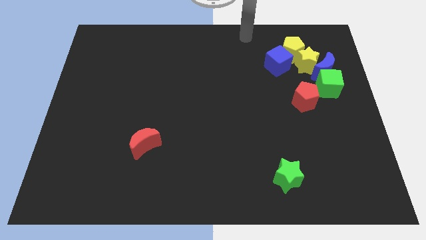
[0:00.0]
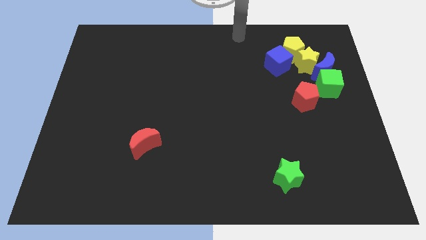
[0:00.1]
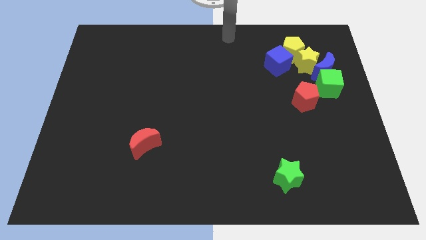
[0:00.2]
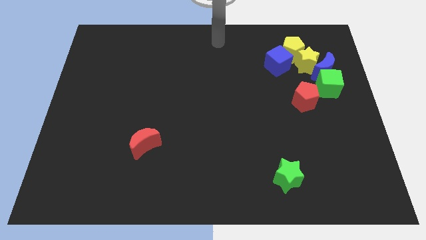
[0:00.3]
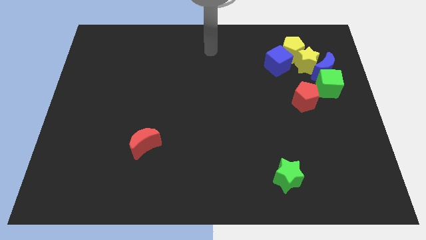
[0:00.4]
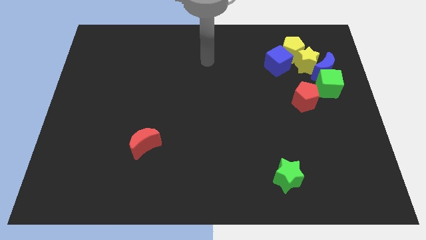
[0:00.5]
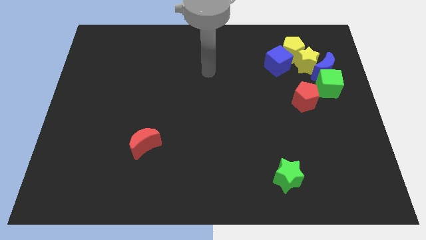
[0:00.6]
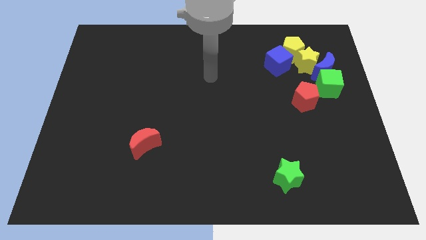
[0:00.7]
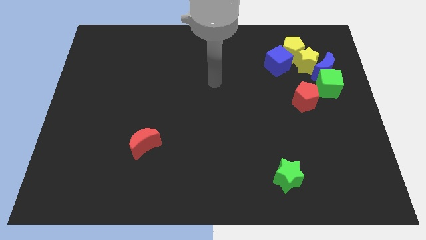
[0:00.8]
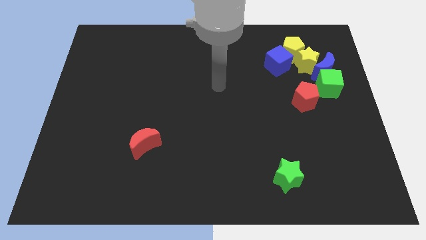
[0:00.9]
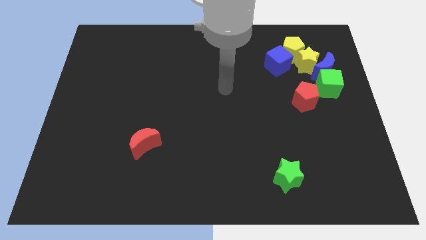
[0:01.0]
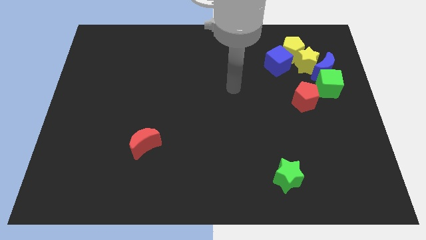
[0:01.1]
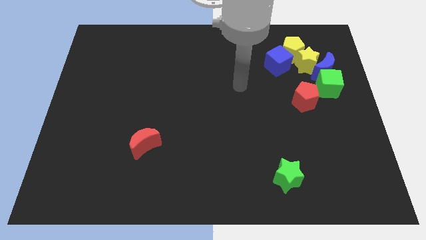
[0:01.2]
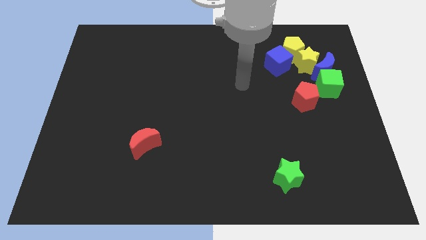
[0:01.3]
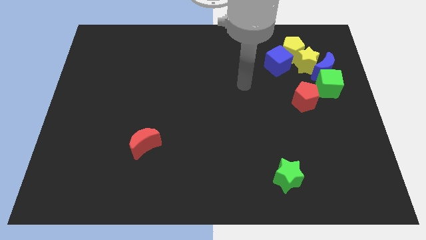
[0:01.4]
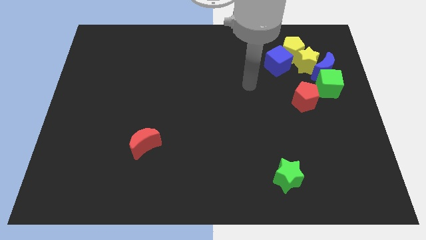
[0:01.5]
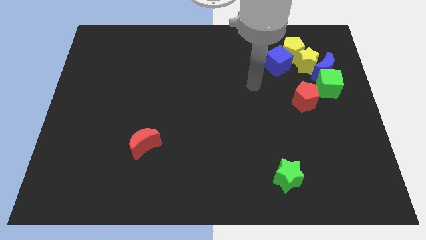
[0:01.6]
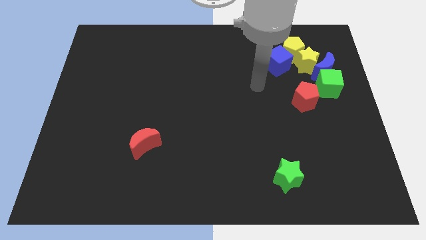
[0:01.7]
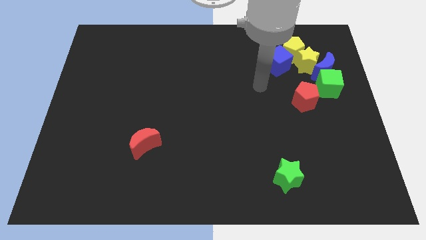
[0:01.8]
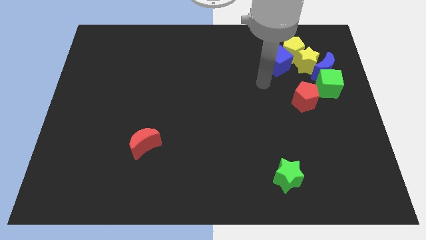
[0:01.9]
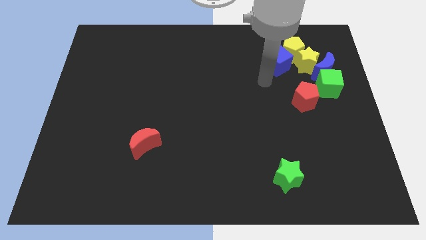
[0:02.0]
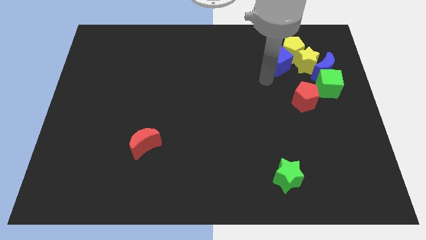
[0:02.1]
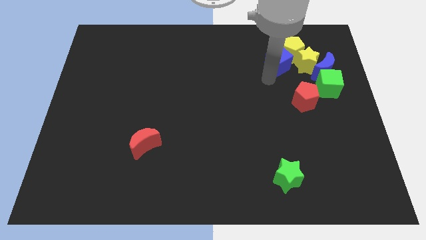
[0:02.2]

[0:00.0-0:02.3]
point your arm at the bottom of the blue cube

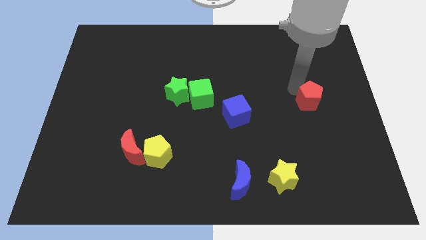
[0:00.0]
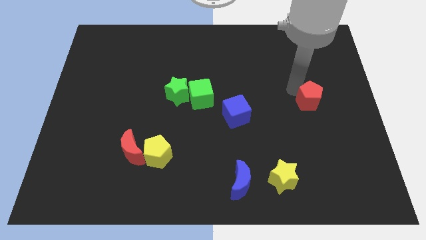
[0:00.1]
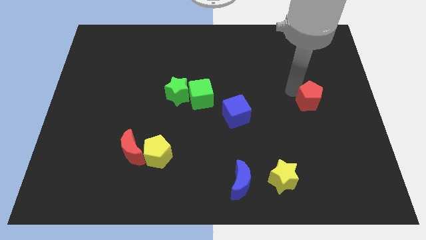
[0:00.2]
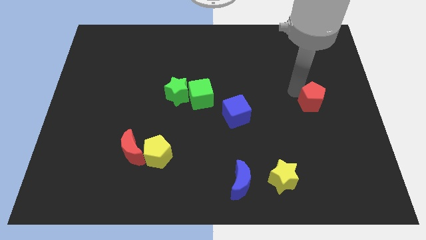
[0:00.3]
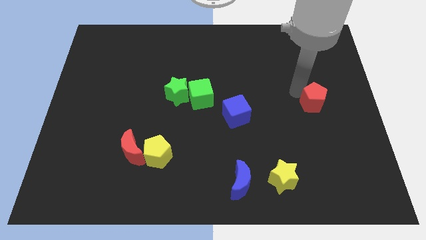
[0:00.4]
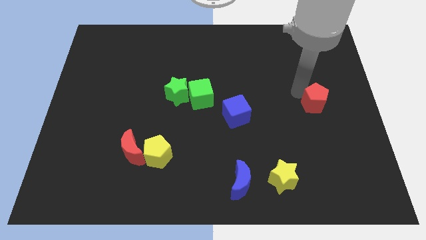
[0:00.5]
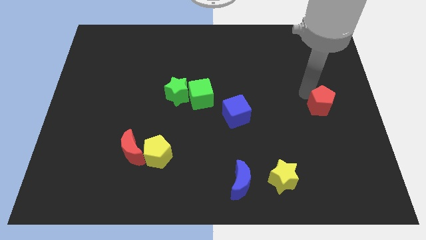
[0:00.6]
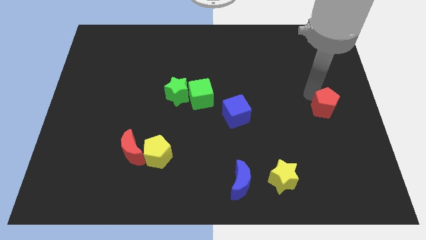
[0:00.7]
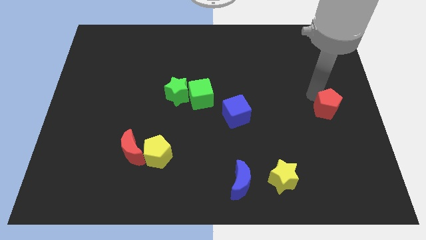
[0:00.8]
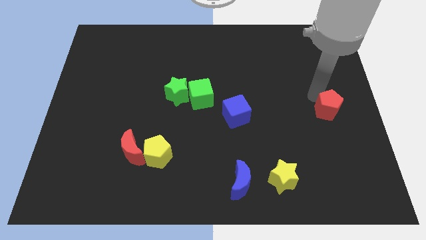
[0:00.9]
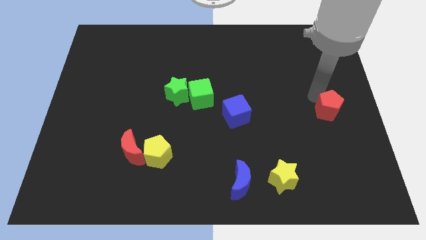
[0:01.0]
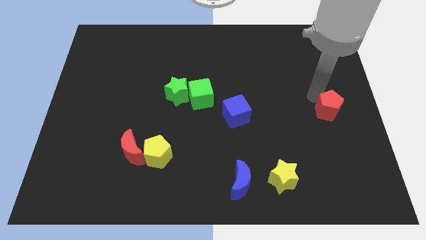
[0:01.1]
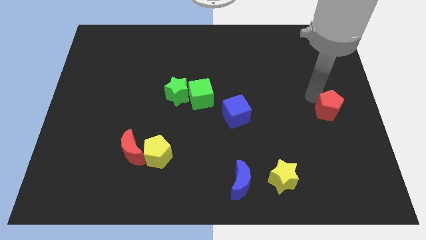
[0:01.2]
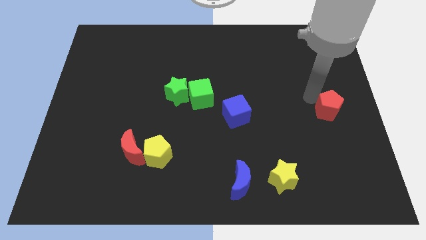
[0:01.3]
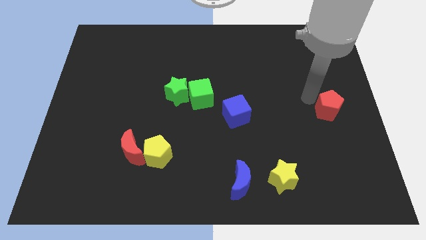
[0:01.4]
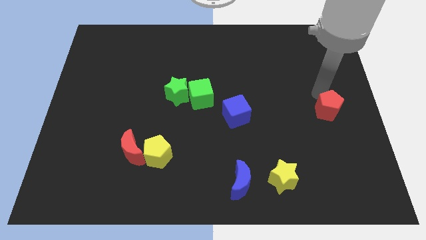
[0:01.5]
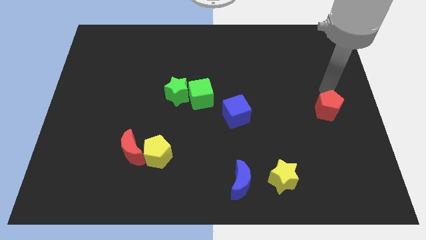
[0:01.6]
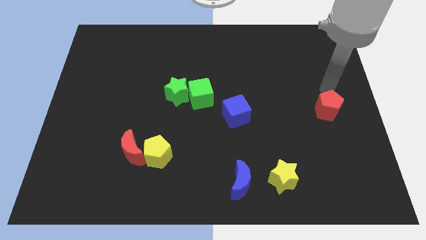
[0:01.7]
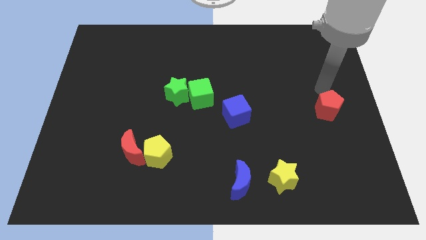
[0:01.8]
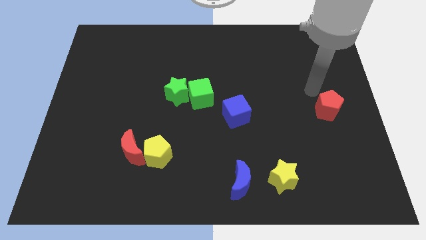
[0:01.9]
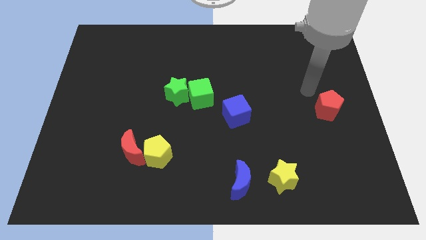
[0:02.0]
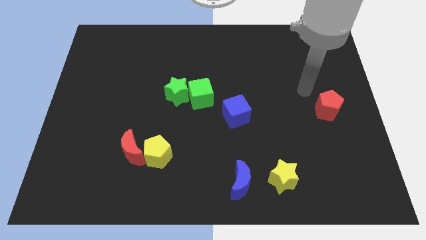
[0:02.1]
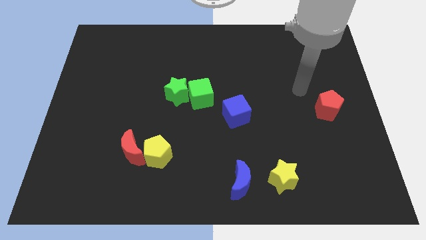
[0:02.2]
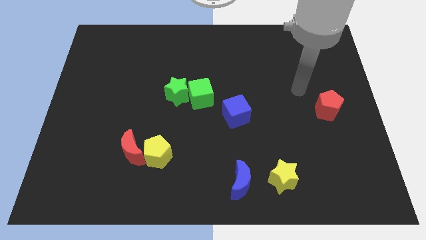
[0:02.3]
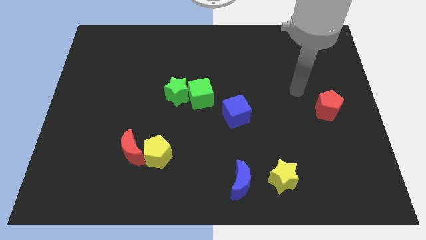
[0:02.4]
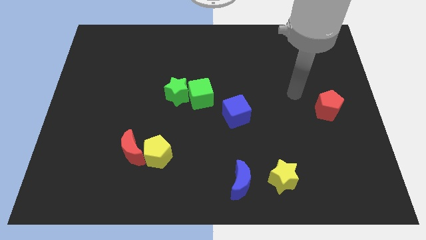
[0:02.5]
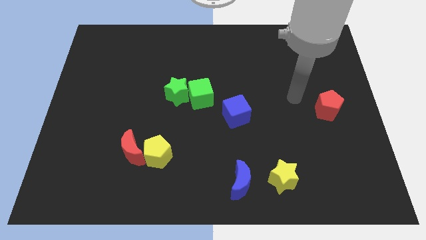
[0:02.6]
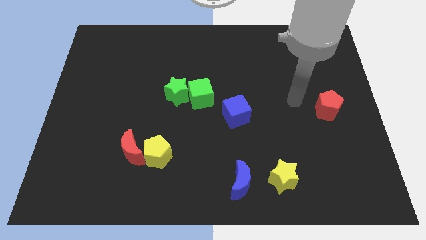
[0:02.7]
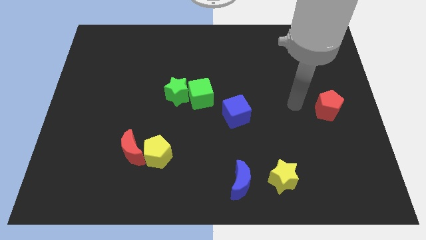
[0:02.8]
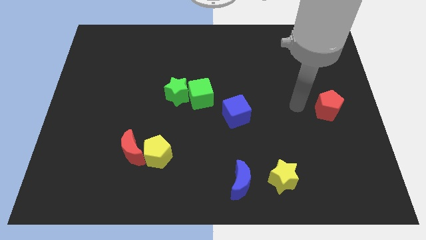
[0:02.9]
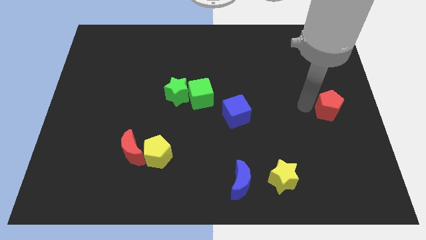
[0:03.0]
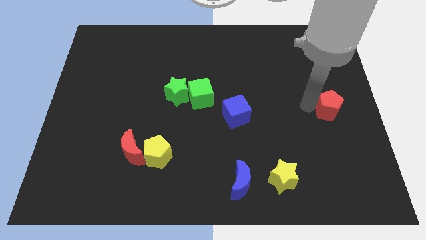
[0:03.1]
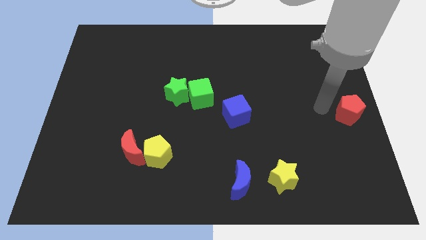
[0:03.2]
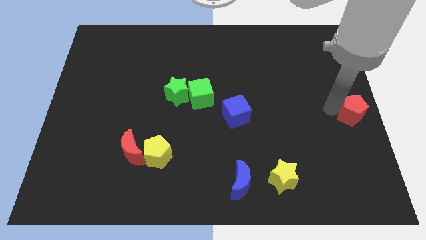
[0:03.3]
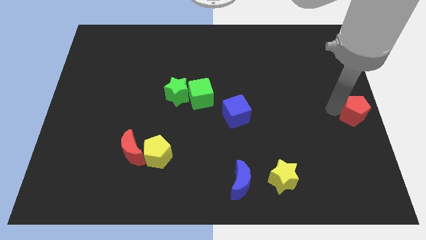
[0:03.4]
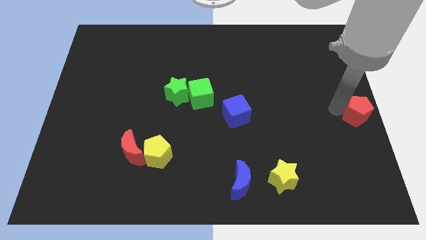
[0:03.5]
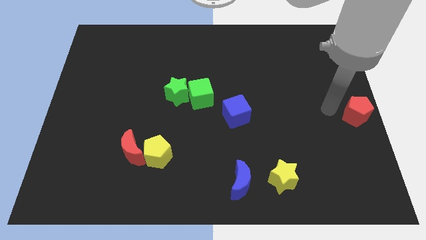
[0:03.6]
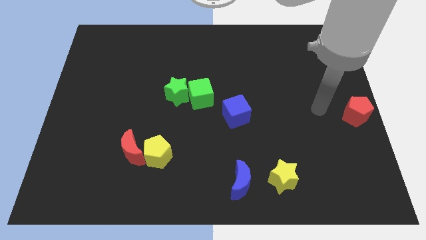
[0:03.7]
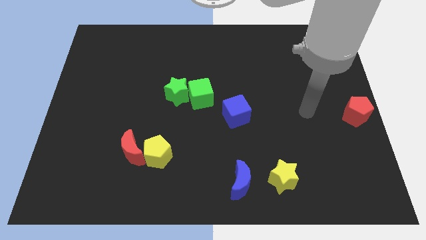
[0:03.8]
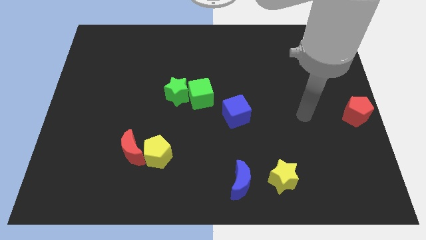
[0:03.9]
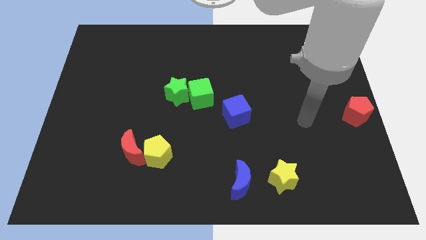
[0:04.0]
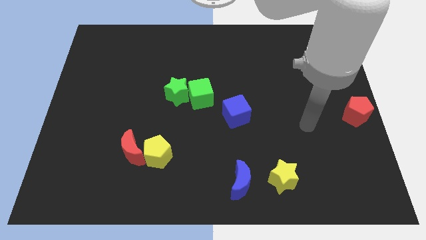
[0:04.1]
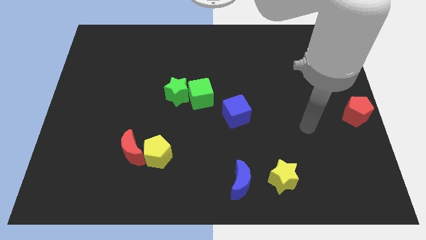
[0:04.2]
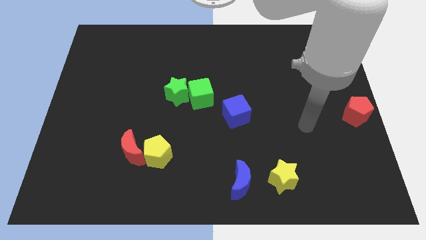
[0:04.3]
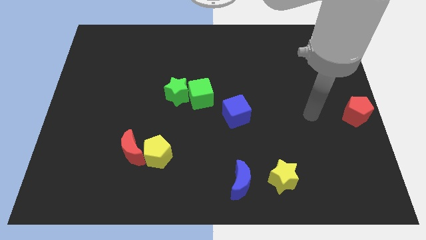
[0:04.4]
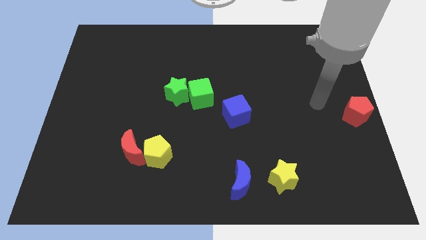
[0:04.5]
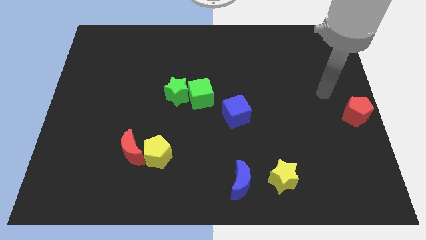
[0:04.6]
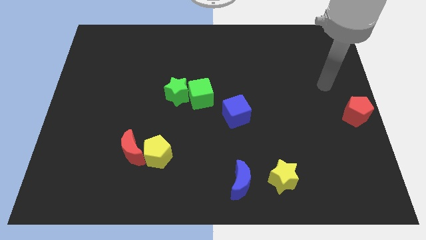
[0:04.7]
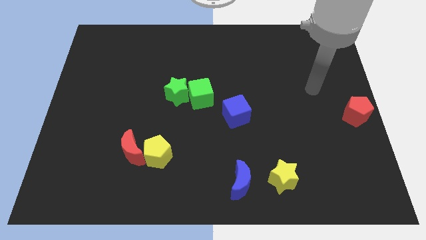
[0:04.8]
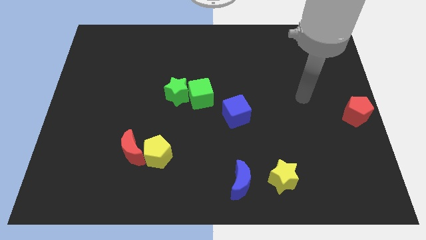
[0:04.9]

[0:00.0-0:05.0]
slide the red pentagon to the right center of the board

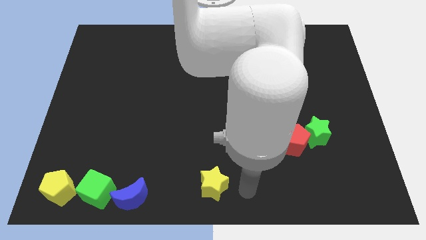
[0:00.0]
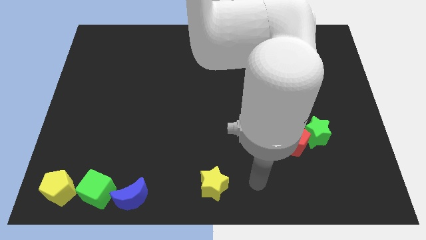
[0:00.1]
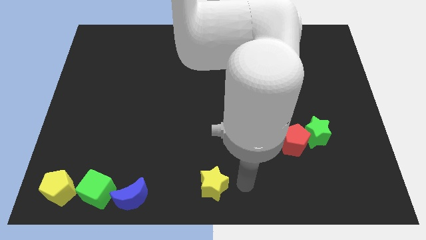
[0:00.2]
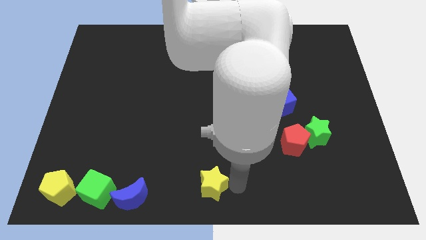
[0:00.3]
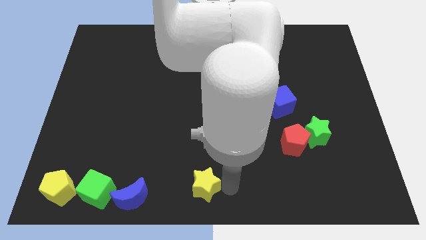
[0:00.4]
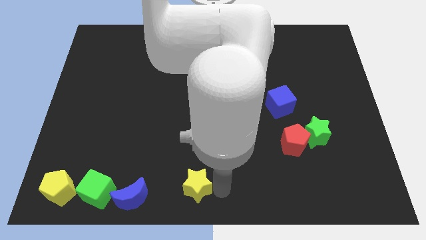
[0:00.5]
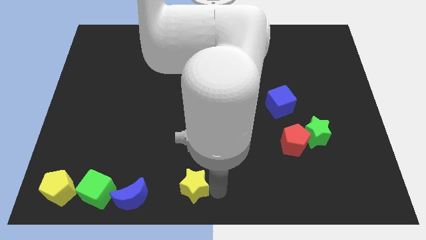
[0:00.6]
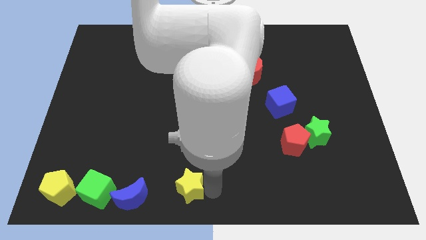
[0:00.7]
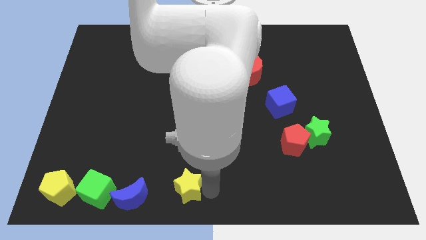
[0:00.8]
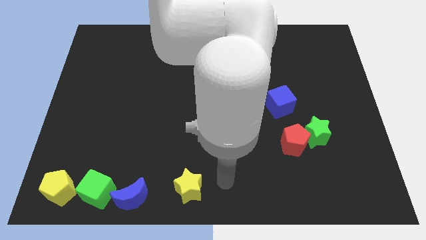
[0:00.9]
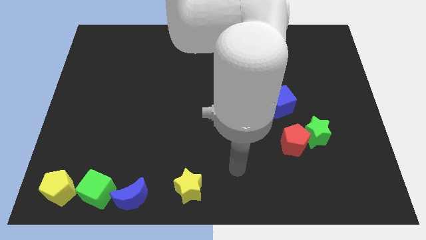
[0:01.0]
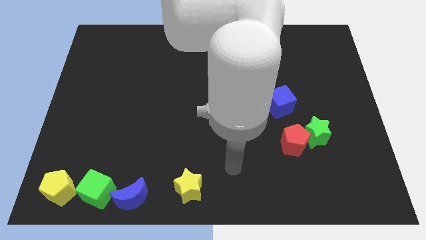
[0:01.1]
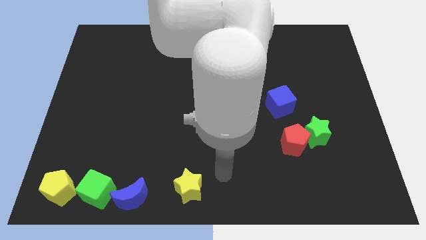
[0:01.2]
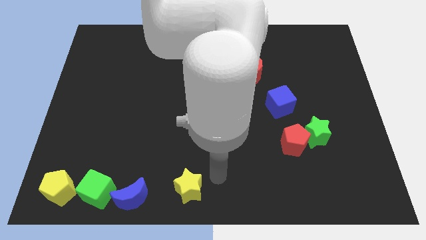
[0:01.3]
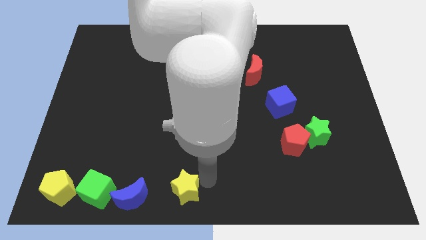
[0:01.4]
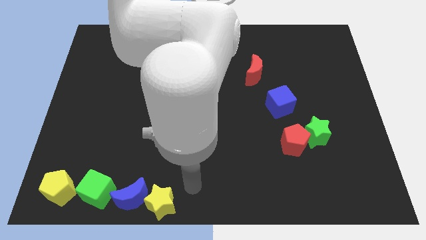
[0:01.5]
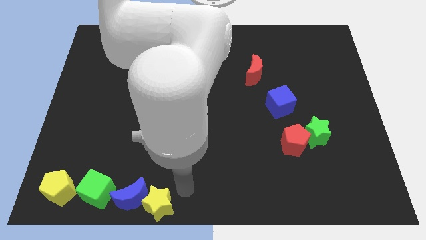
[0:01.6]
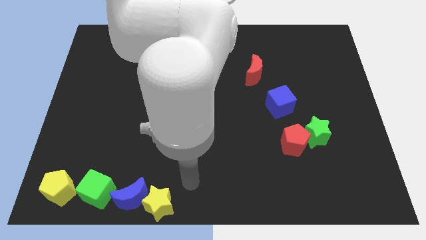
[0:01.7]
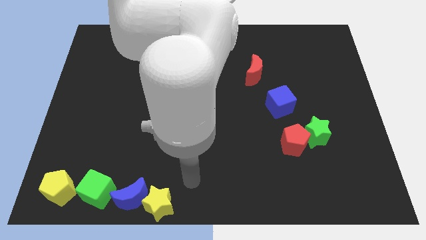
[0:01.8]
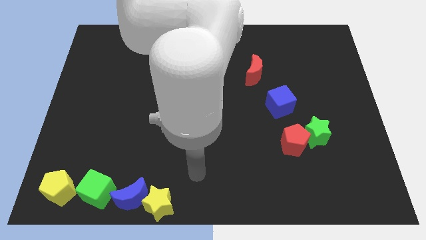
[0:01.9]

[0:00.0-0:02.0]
move the yellow star into blue crescent
